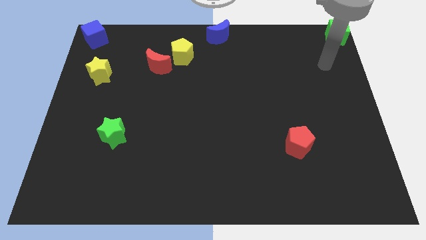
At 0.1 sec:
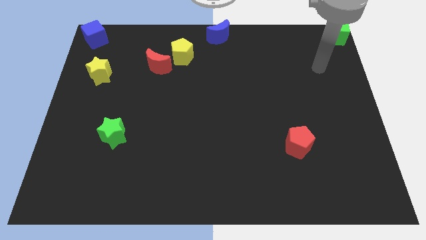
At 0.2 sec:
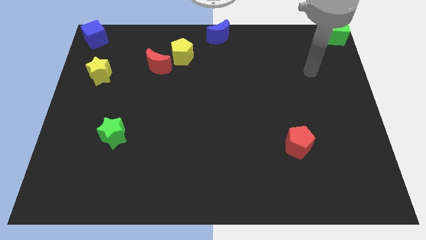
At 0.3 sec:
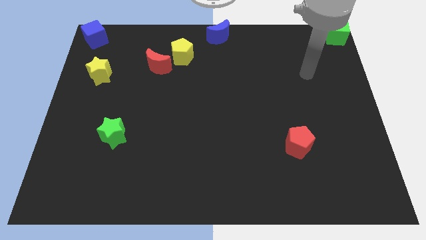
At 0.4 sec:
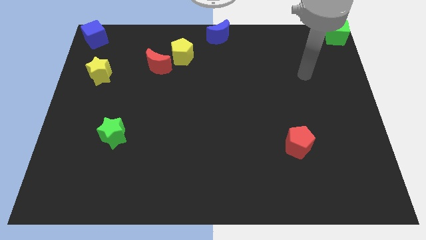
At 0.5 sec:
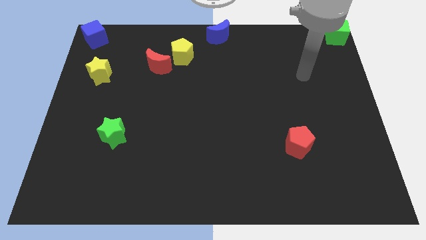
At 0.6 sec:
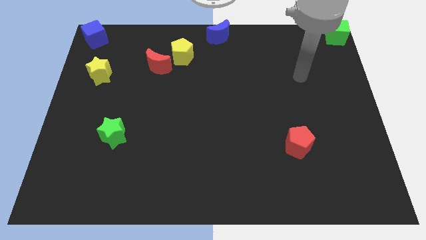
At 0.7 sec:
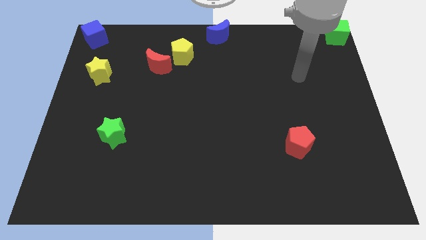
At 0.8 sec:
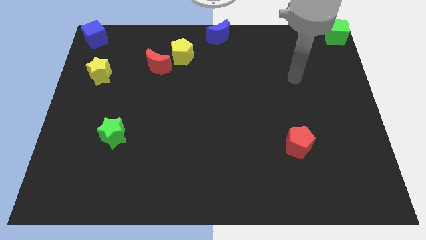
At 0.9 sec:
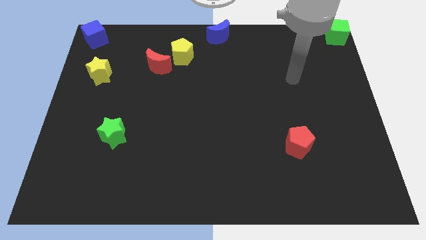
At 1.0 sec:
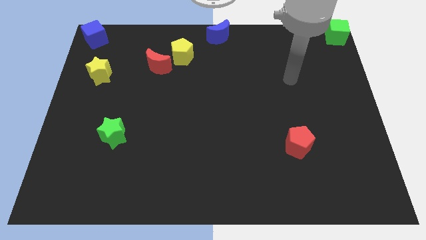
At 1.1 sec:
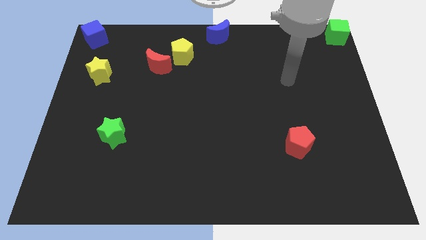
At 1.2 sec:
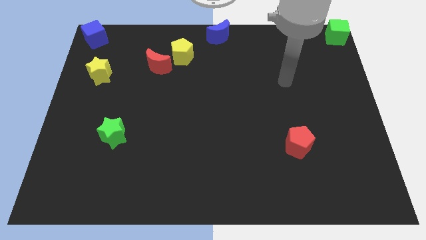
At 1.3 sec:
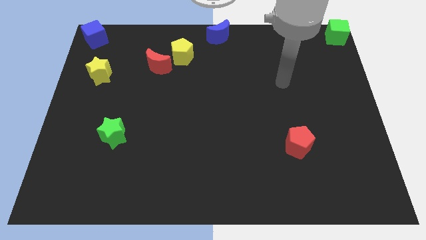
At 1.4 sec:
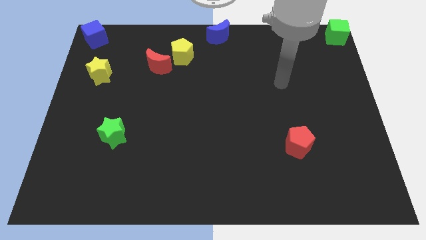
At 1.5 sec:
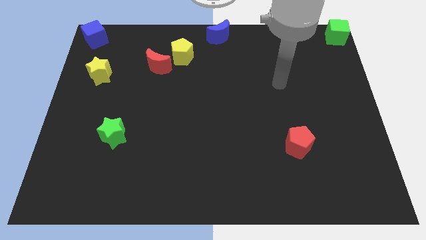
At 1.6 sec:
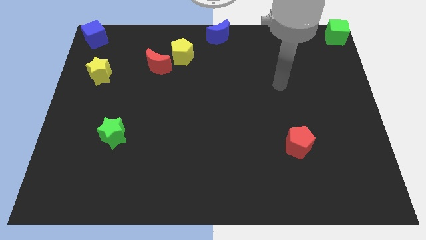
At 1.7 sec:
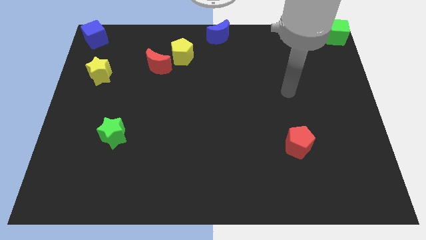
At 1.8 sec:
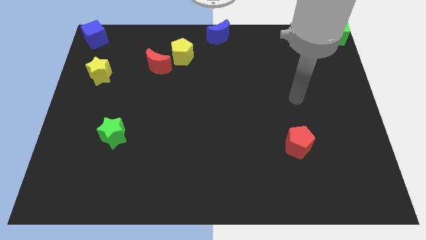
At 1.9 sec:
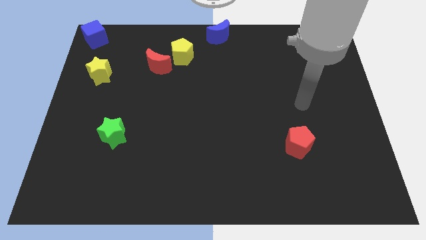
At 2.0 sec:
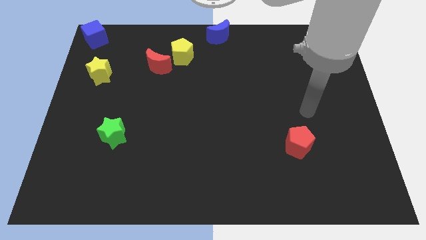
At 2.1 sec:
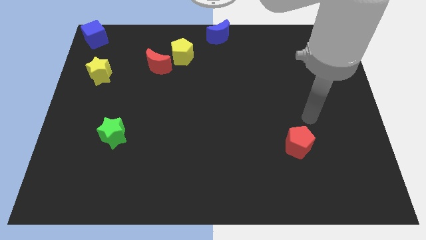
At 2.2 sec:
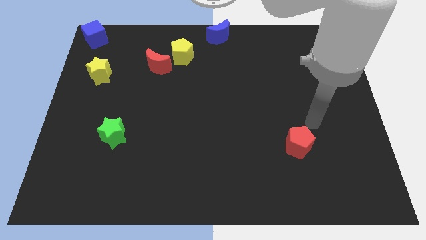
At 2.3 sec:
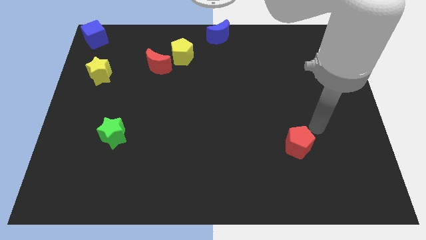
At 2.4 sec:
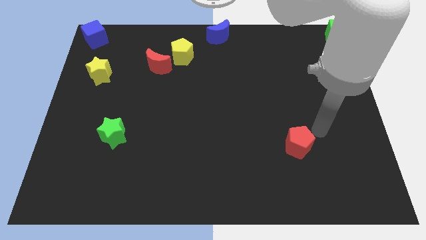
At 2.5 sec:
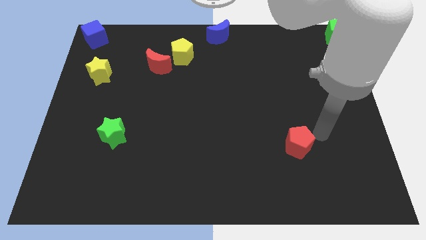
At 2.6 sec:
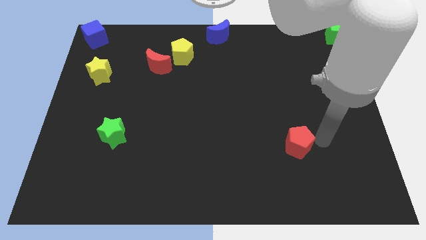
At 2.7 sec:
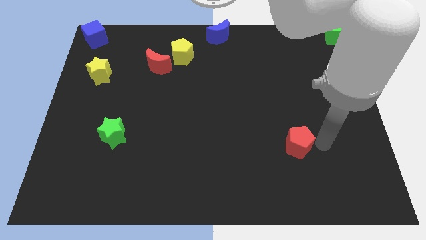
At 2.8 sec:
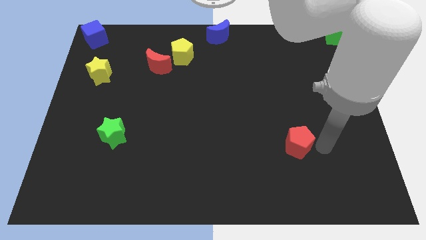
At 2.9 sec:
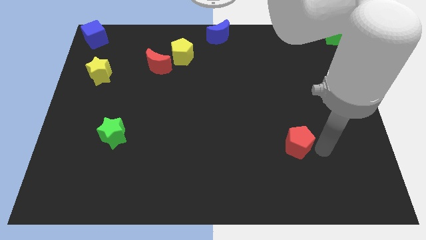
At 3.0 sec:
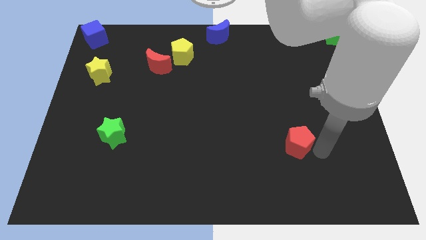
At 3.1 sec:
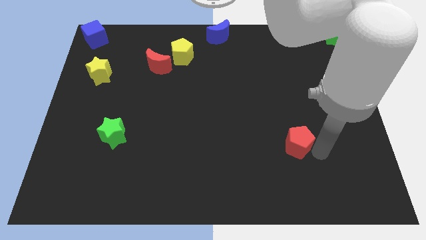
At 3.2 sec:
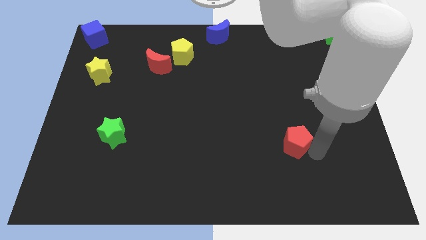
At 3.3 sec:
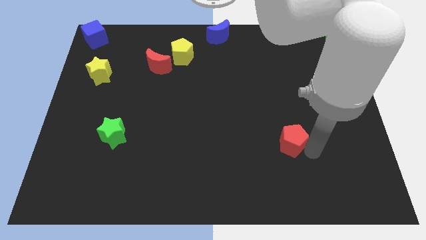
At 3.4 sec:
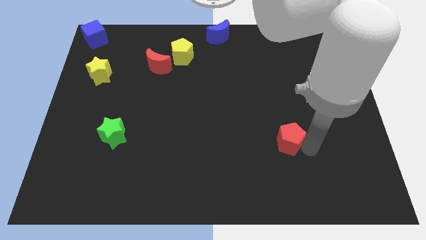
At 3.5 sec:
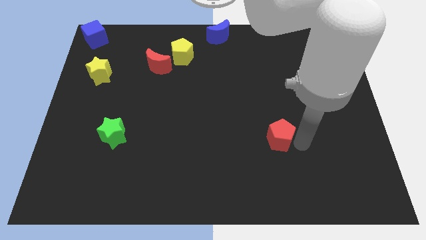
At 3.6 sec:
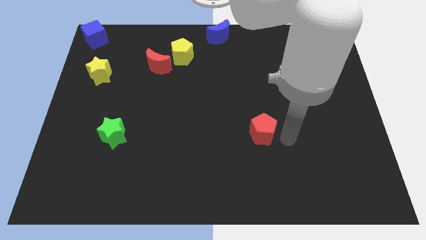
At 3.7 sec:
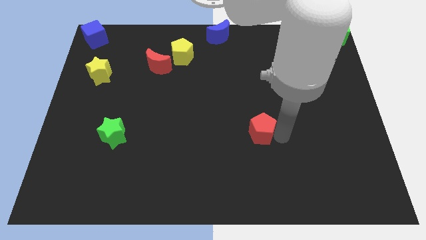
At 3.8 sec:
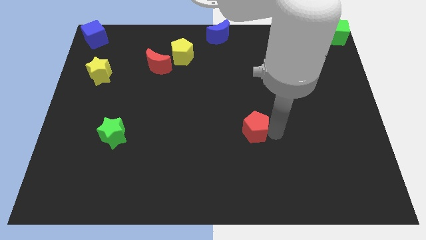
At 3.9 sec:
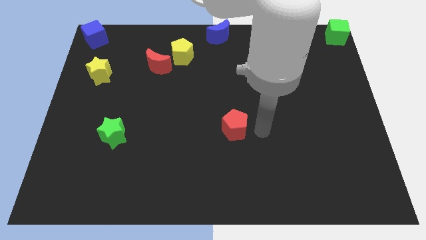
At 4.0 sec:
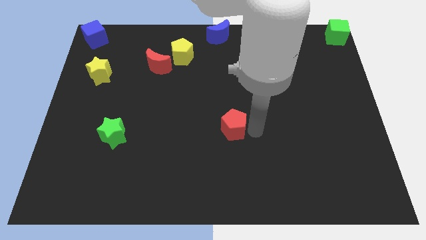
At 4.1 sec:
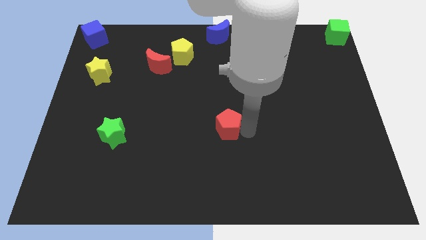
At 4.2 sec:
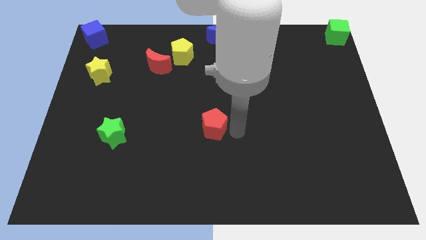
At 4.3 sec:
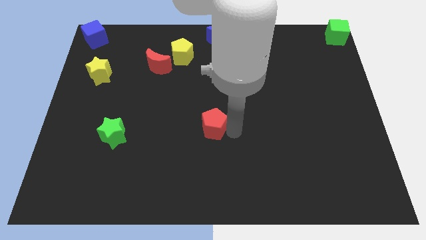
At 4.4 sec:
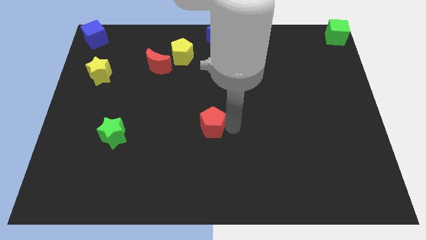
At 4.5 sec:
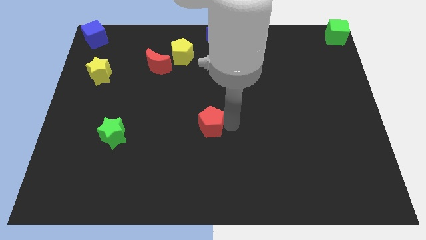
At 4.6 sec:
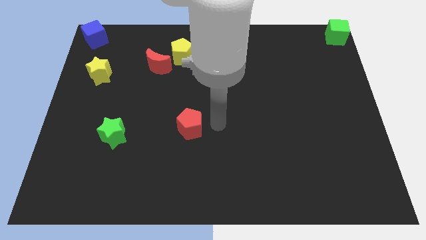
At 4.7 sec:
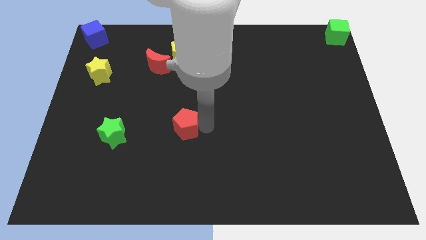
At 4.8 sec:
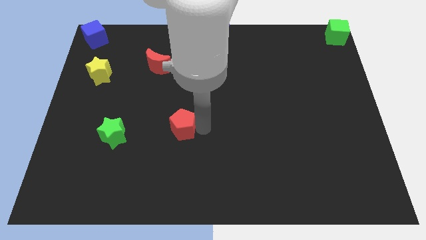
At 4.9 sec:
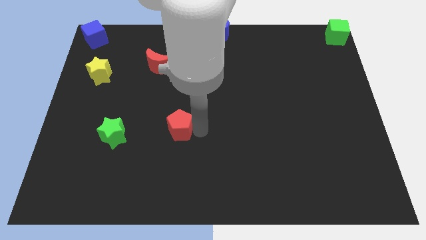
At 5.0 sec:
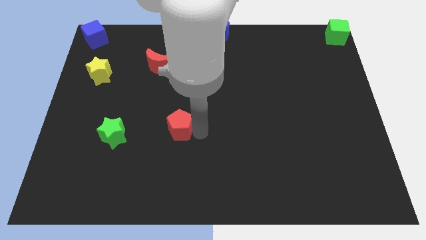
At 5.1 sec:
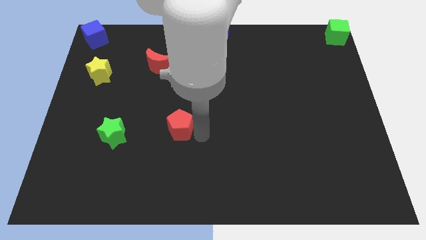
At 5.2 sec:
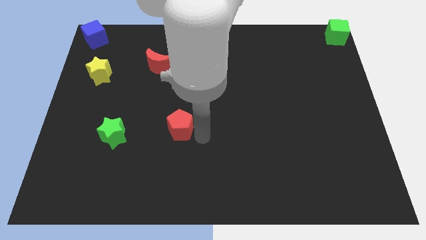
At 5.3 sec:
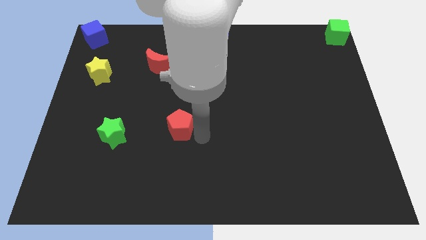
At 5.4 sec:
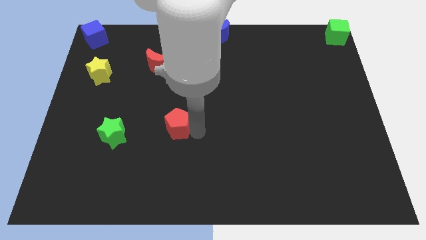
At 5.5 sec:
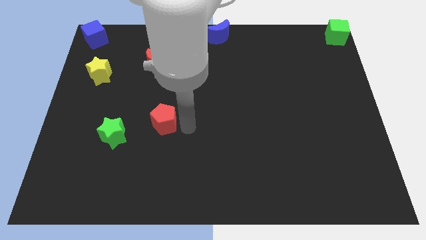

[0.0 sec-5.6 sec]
put the red pentagon to the right of the green star

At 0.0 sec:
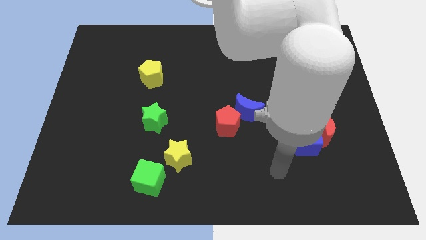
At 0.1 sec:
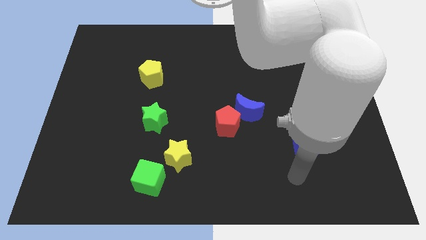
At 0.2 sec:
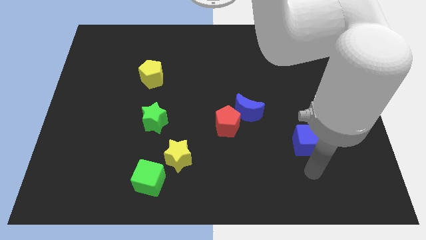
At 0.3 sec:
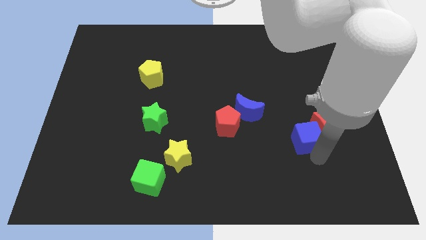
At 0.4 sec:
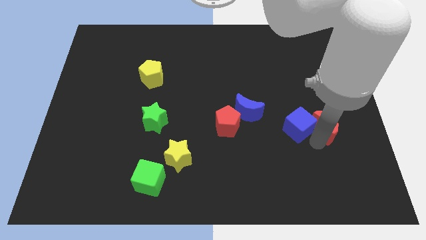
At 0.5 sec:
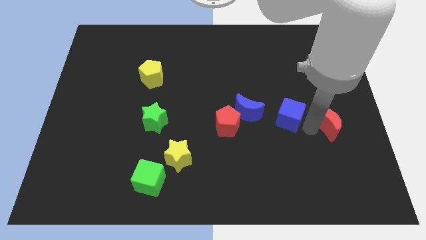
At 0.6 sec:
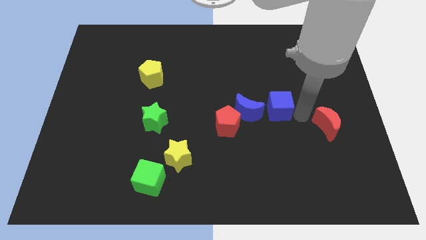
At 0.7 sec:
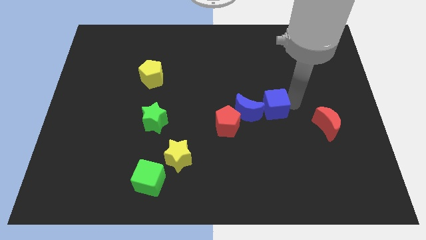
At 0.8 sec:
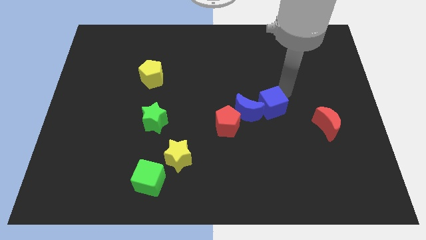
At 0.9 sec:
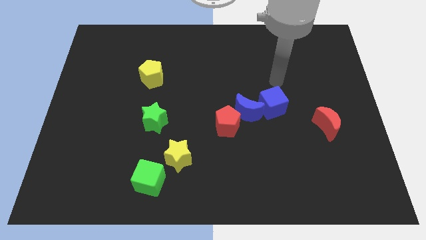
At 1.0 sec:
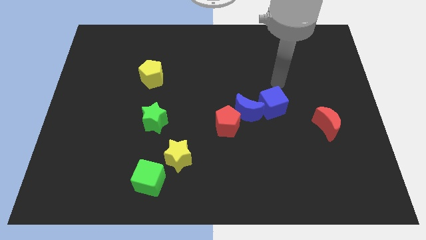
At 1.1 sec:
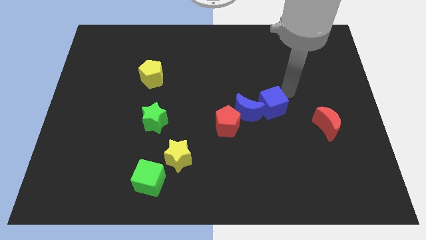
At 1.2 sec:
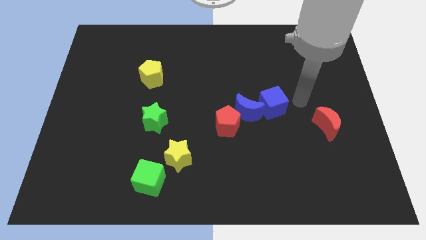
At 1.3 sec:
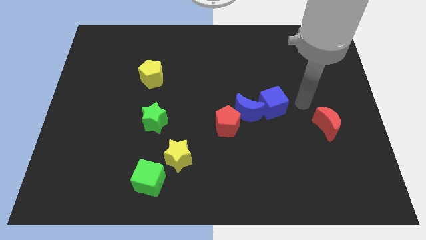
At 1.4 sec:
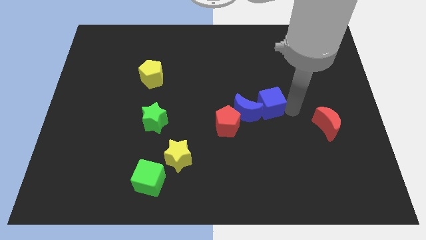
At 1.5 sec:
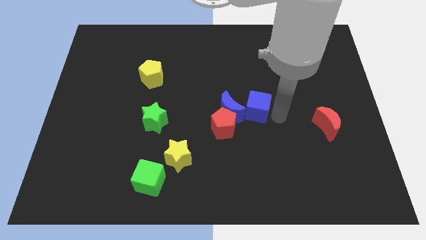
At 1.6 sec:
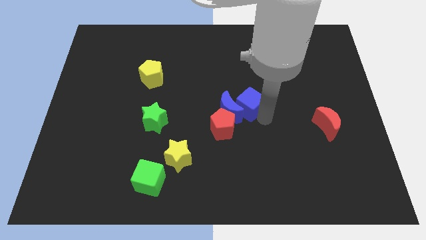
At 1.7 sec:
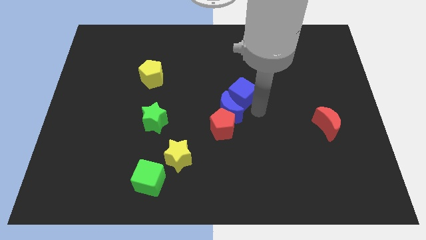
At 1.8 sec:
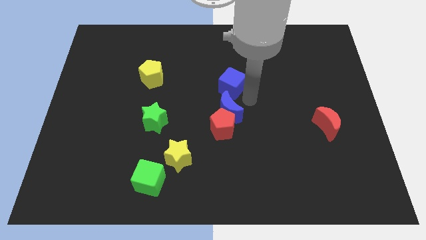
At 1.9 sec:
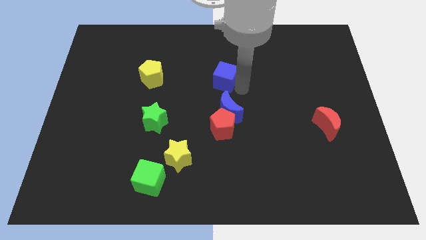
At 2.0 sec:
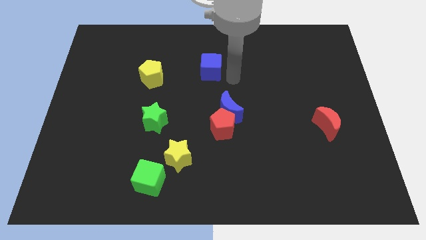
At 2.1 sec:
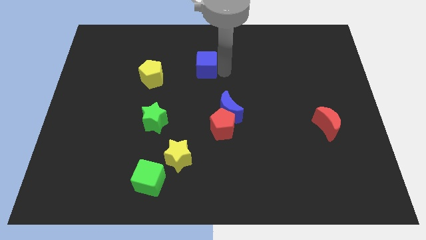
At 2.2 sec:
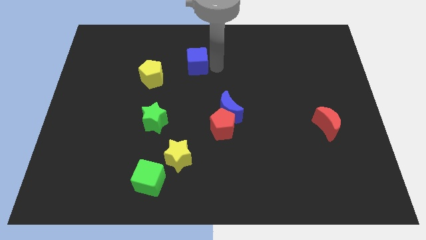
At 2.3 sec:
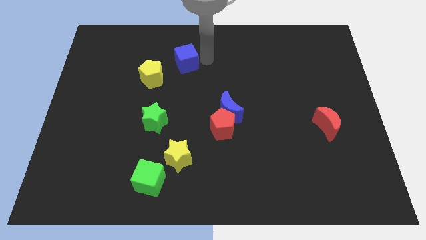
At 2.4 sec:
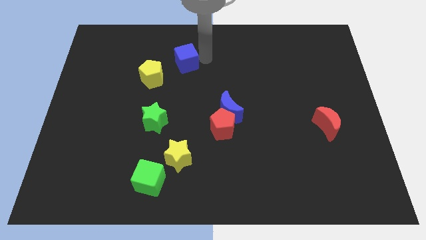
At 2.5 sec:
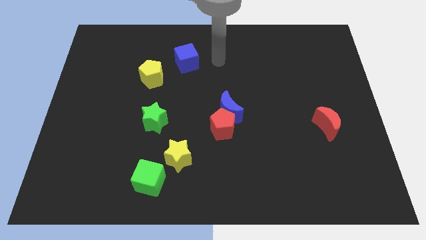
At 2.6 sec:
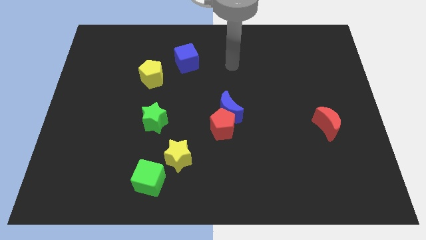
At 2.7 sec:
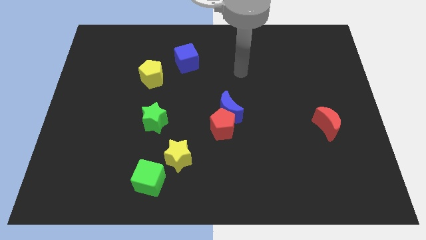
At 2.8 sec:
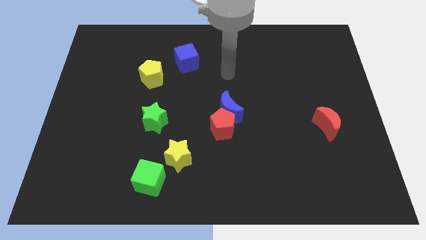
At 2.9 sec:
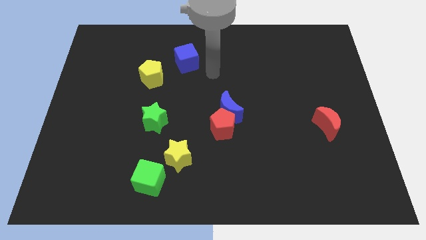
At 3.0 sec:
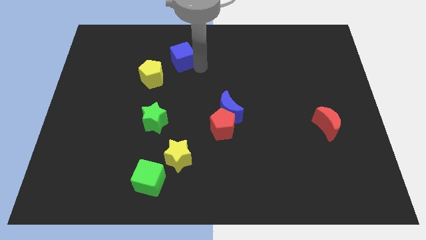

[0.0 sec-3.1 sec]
move the blue block to the top right side of the yellow pentagon

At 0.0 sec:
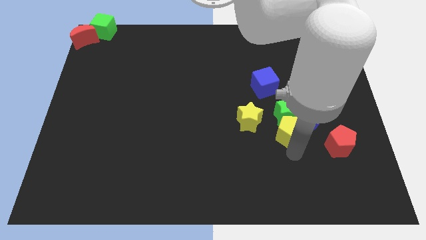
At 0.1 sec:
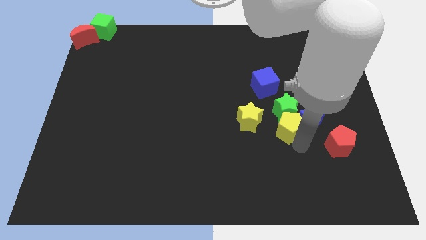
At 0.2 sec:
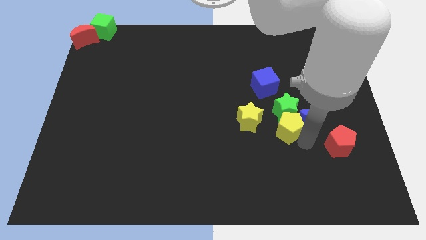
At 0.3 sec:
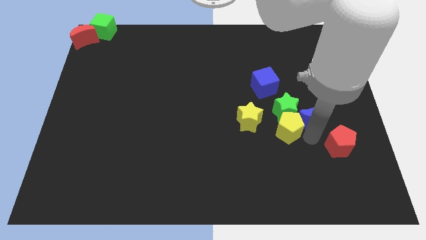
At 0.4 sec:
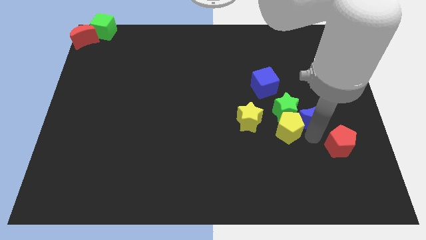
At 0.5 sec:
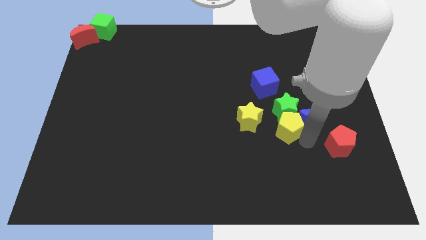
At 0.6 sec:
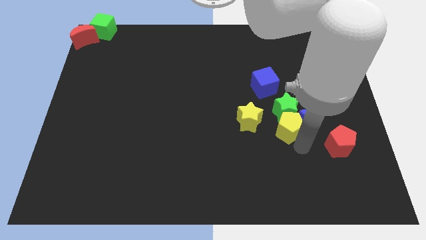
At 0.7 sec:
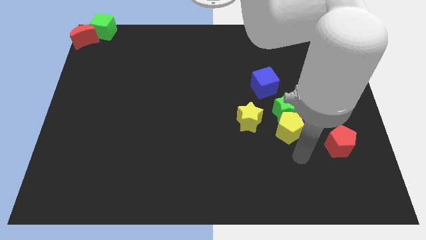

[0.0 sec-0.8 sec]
push the yellow pentagon in green star
